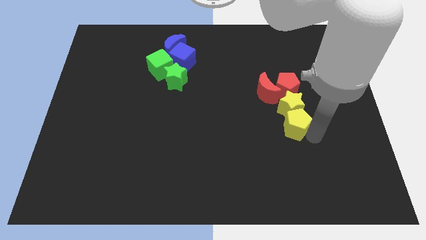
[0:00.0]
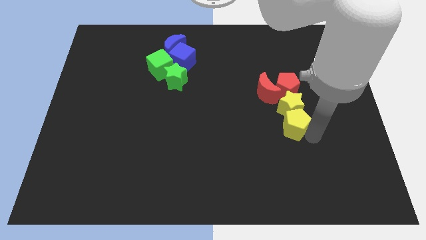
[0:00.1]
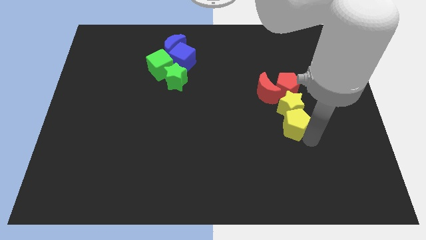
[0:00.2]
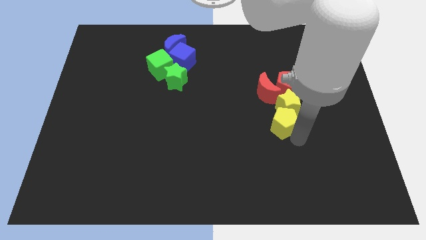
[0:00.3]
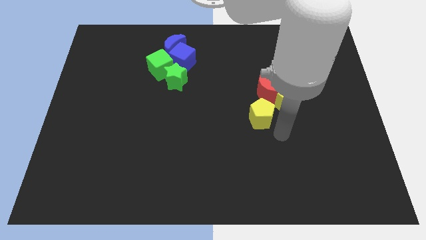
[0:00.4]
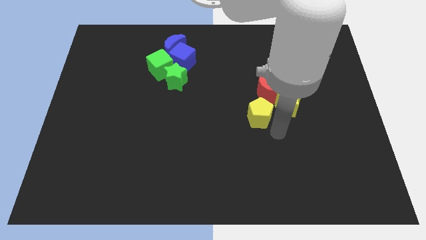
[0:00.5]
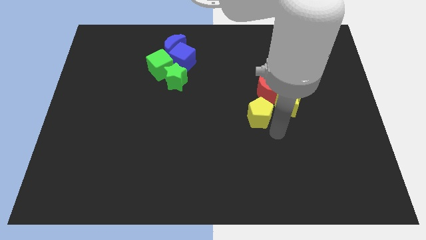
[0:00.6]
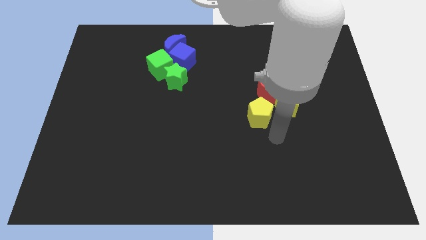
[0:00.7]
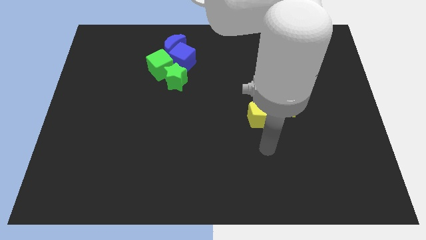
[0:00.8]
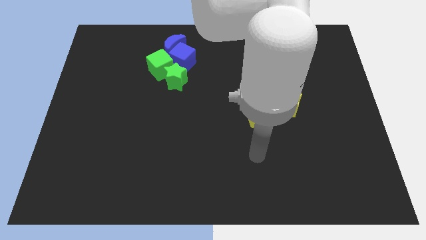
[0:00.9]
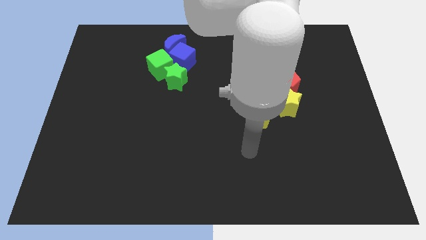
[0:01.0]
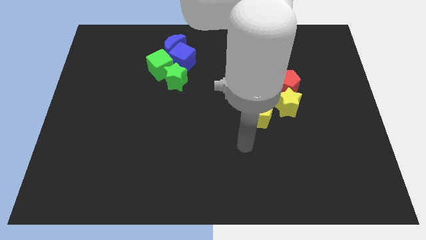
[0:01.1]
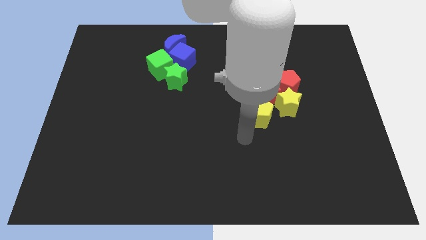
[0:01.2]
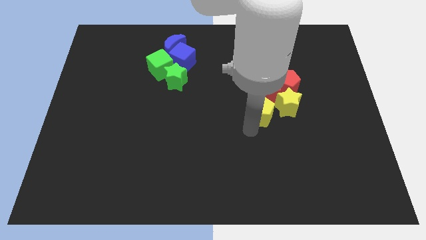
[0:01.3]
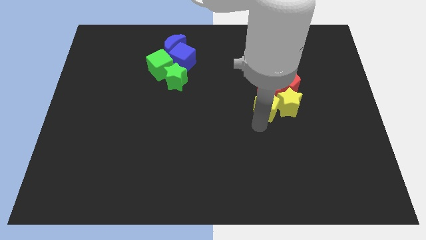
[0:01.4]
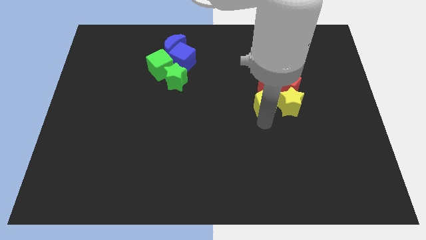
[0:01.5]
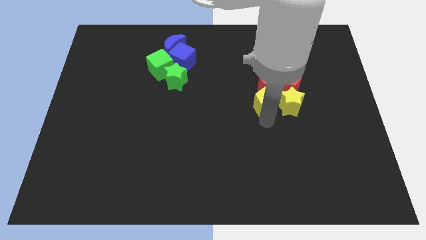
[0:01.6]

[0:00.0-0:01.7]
move the yellow pentagon towards the left side of the yellow star

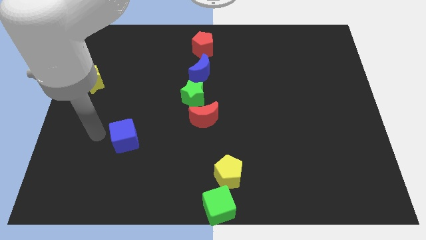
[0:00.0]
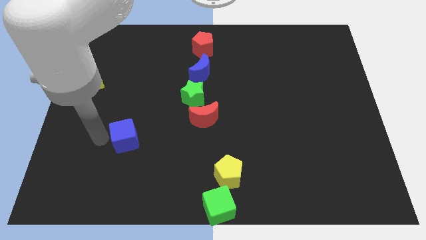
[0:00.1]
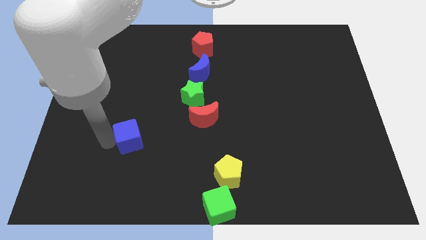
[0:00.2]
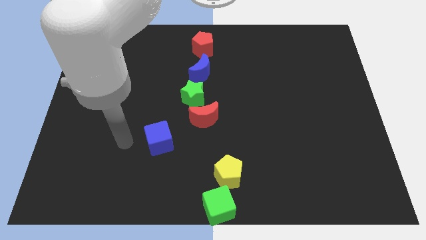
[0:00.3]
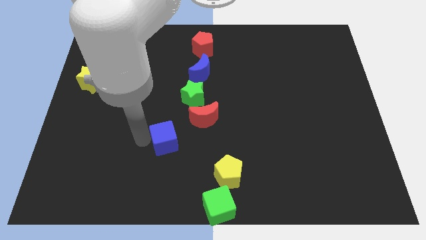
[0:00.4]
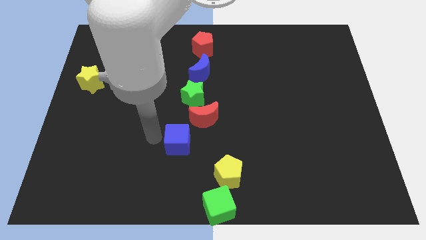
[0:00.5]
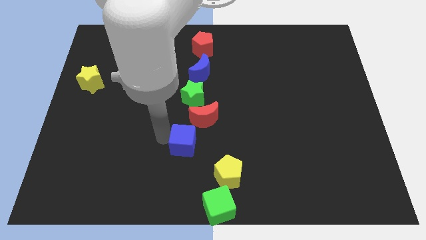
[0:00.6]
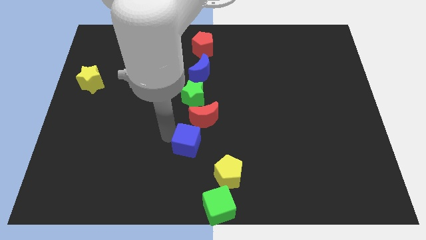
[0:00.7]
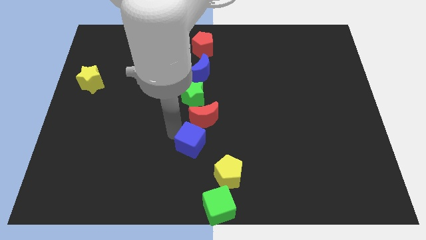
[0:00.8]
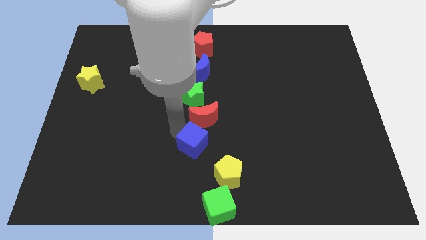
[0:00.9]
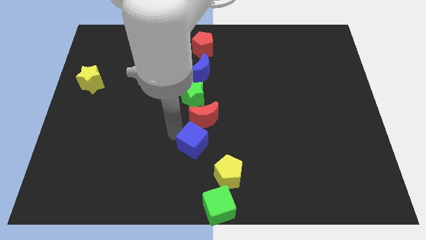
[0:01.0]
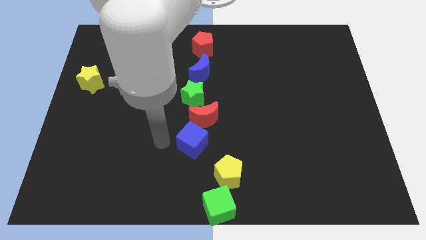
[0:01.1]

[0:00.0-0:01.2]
place the blue cube below the red crescent

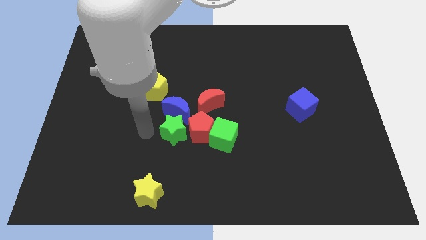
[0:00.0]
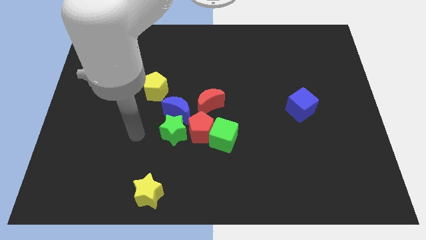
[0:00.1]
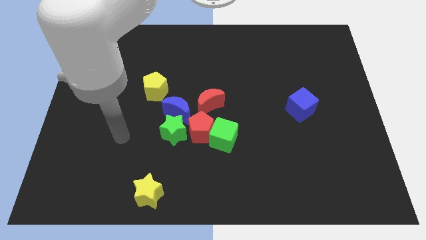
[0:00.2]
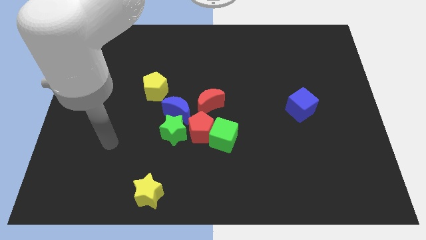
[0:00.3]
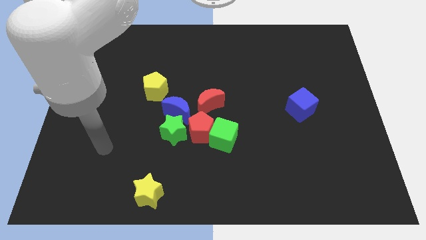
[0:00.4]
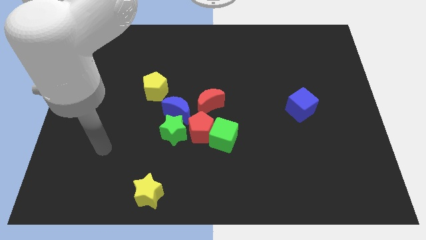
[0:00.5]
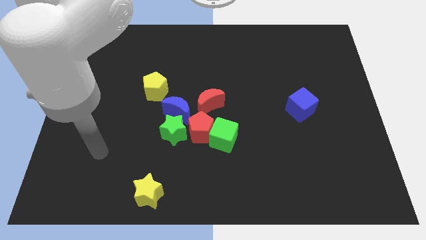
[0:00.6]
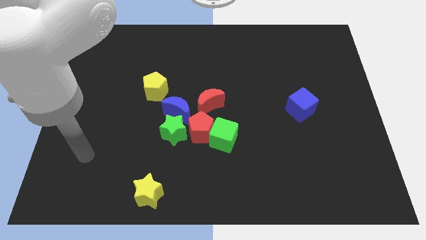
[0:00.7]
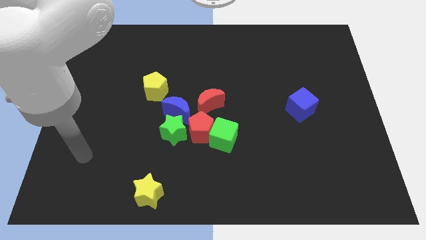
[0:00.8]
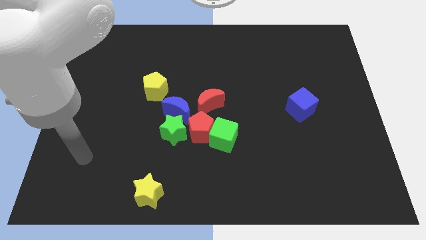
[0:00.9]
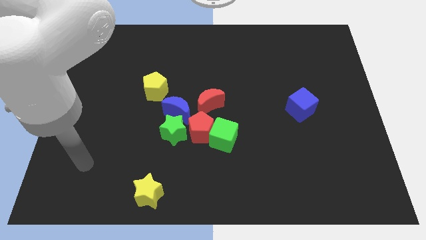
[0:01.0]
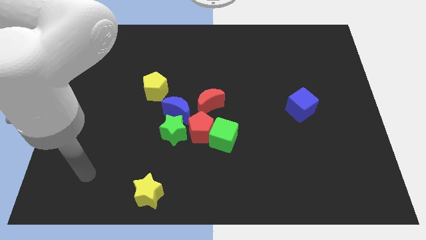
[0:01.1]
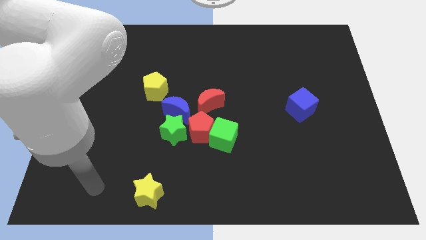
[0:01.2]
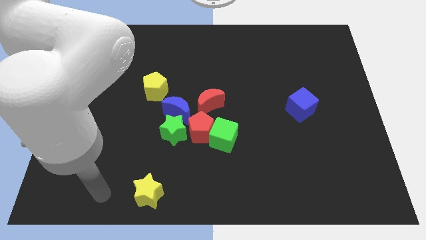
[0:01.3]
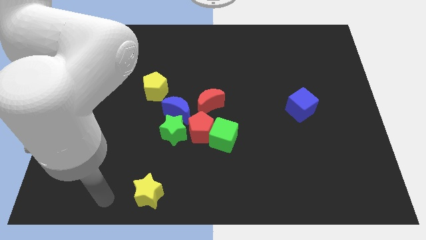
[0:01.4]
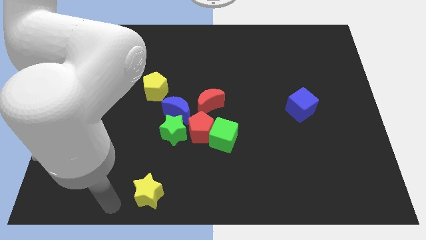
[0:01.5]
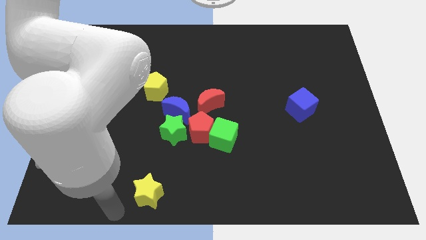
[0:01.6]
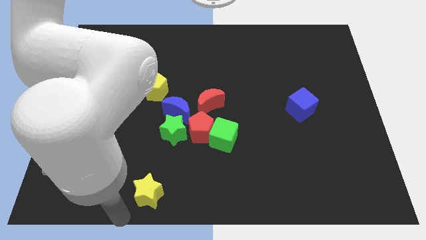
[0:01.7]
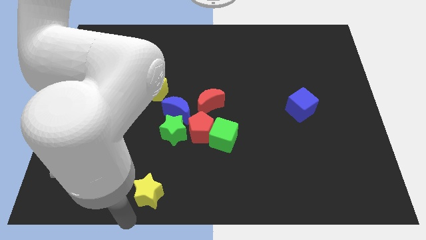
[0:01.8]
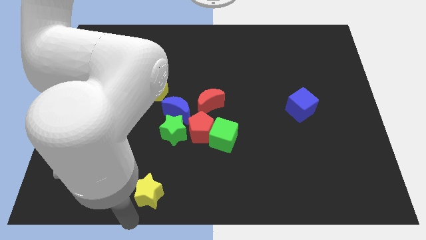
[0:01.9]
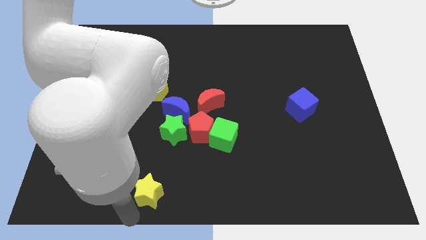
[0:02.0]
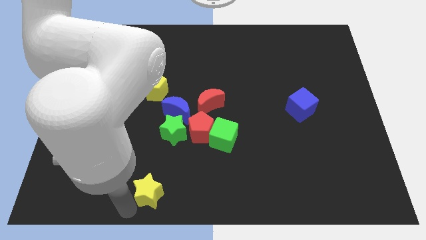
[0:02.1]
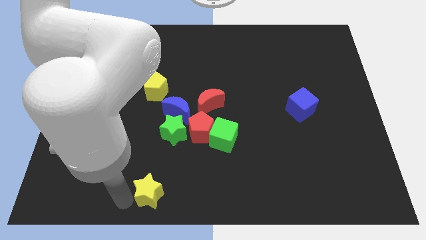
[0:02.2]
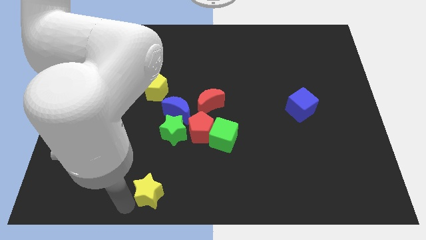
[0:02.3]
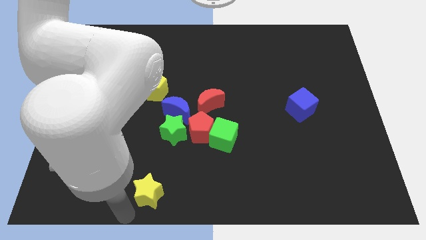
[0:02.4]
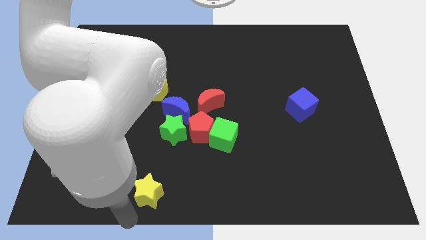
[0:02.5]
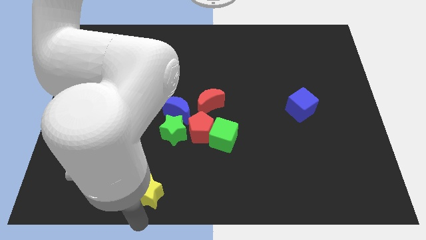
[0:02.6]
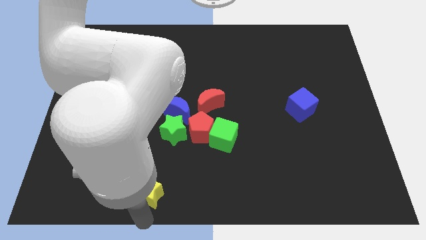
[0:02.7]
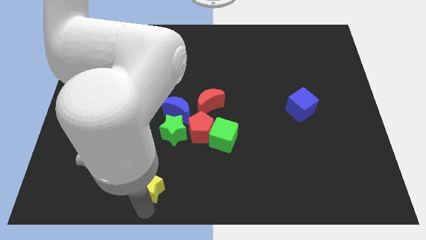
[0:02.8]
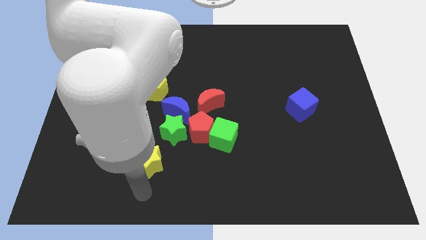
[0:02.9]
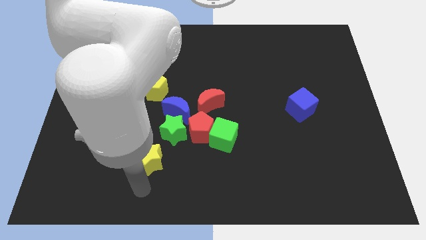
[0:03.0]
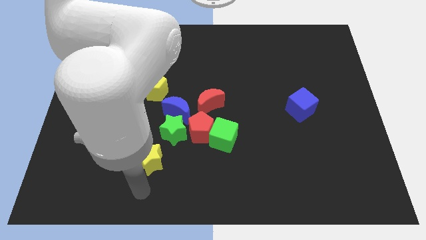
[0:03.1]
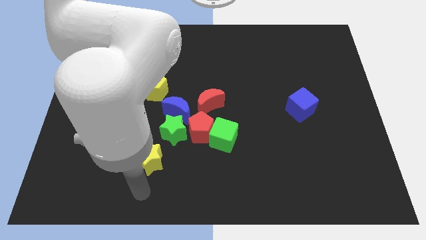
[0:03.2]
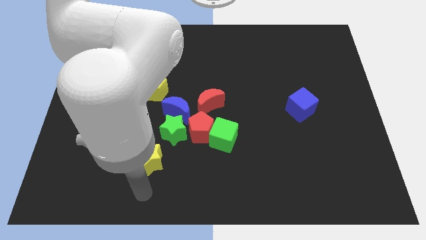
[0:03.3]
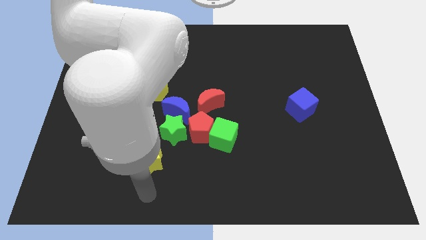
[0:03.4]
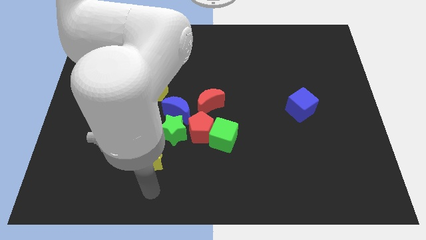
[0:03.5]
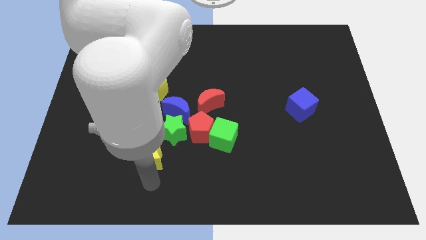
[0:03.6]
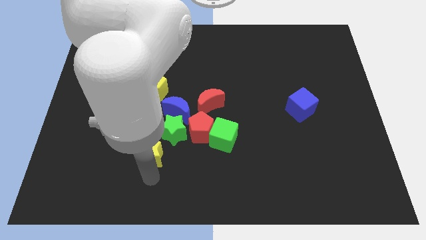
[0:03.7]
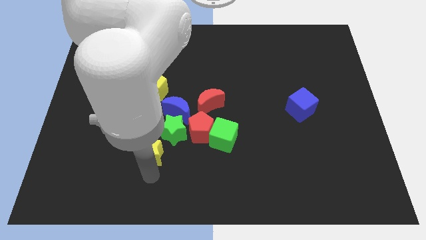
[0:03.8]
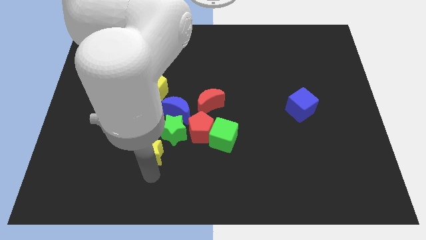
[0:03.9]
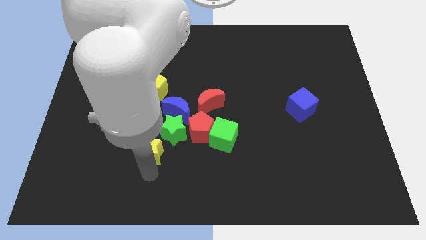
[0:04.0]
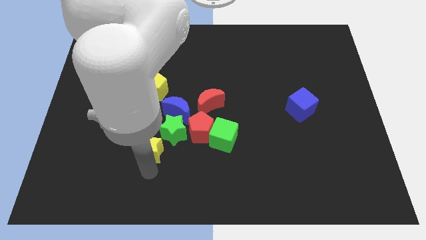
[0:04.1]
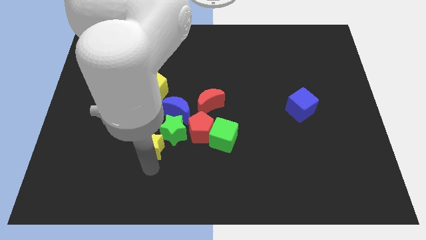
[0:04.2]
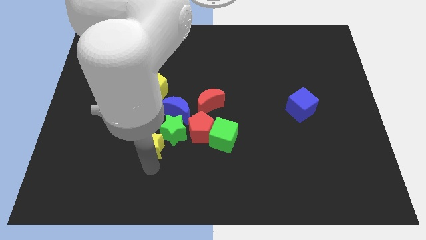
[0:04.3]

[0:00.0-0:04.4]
move the yellow star close to the green star

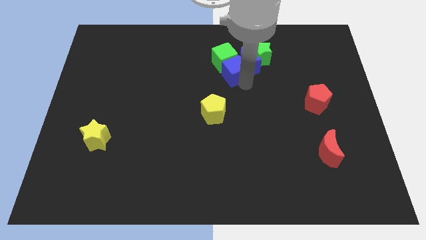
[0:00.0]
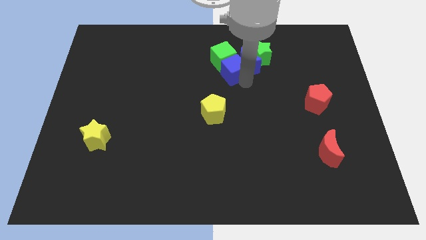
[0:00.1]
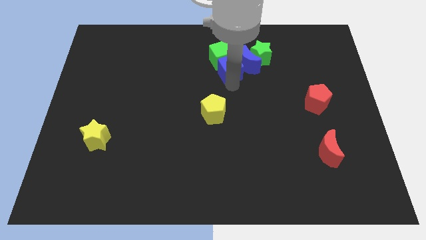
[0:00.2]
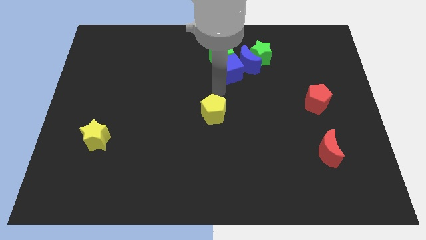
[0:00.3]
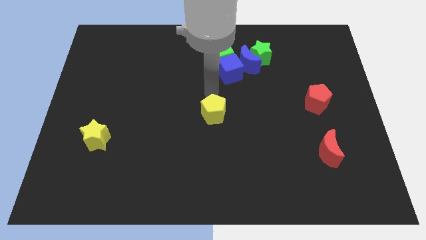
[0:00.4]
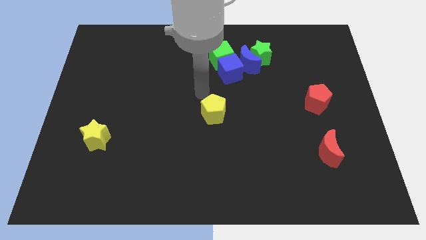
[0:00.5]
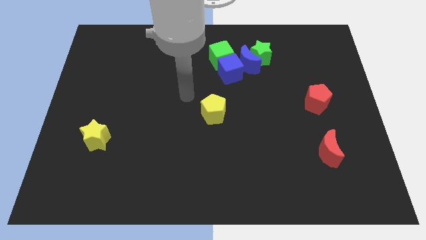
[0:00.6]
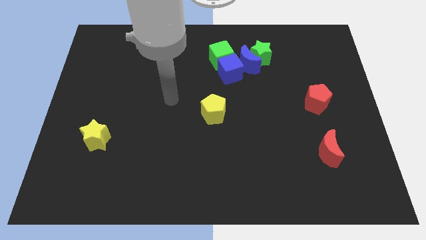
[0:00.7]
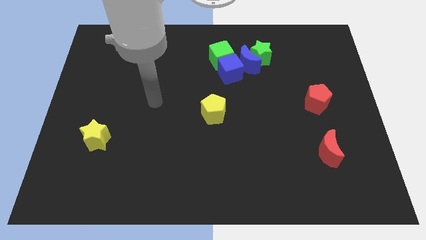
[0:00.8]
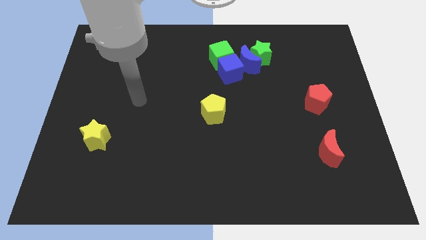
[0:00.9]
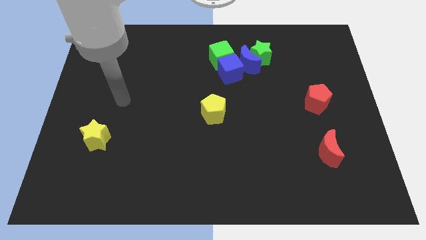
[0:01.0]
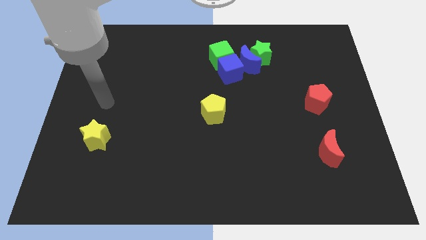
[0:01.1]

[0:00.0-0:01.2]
move the arm to the center left

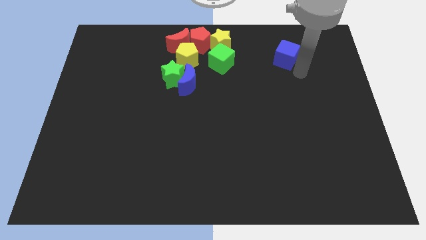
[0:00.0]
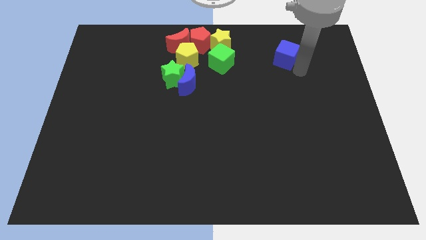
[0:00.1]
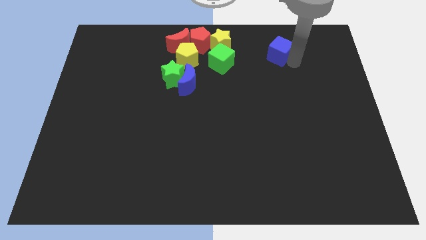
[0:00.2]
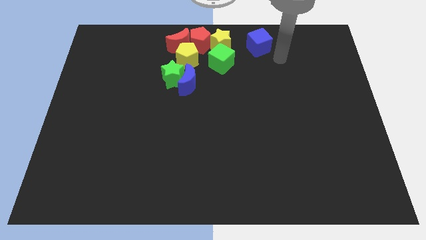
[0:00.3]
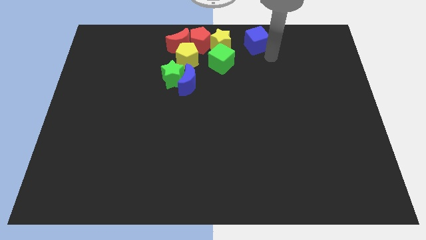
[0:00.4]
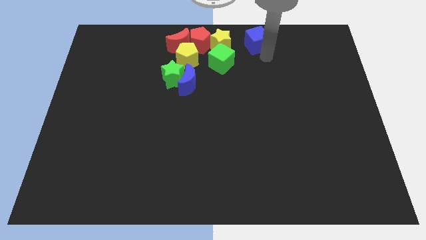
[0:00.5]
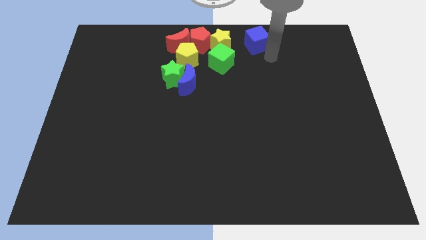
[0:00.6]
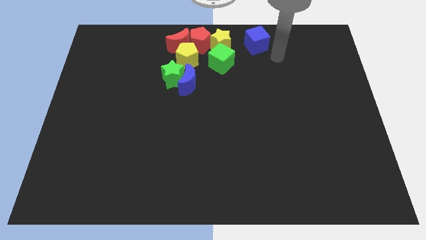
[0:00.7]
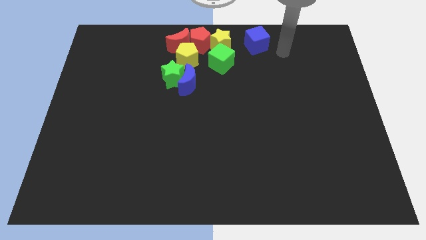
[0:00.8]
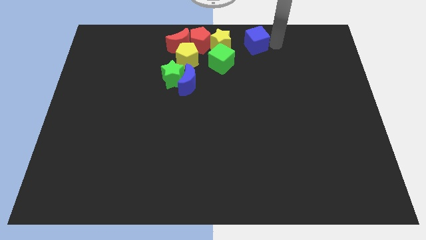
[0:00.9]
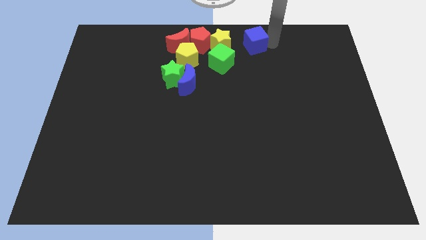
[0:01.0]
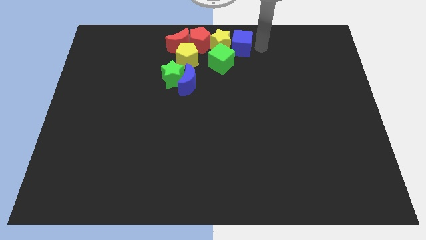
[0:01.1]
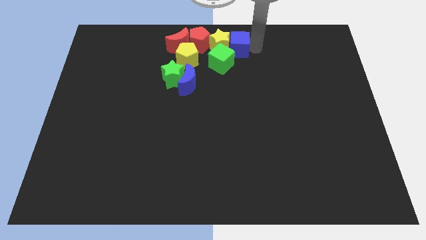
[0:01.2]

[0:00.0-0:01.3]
move the blue cube into the right side of the yellow star
